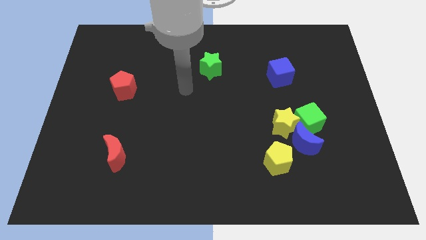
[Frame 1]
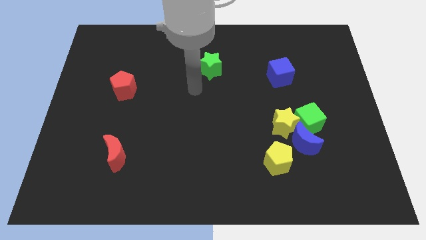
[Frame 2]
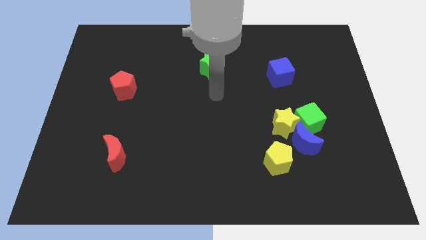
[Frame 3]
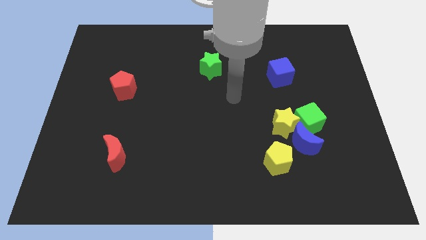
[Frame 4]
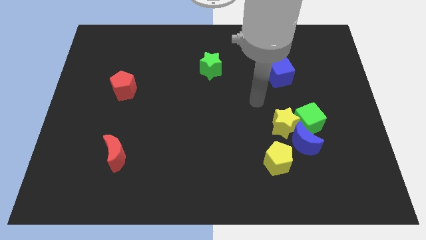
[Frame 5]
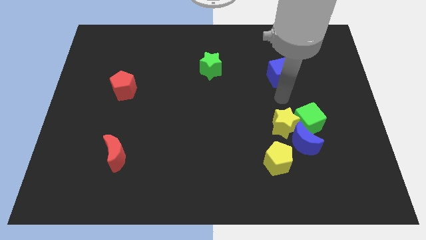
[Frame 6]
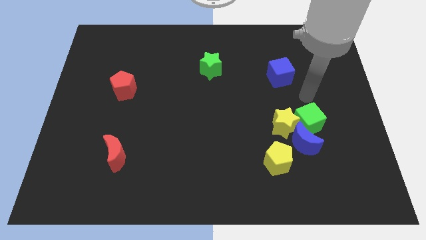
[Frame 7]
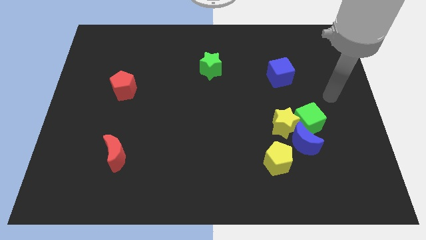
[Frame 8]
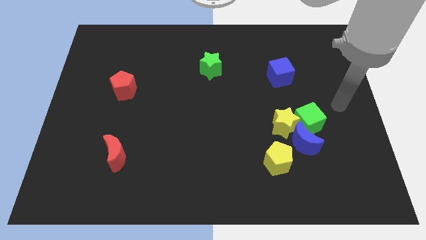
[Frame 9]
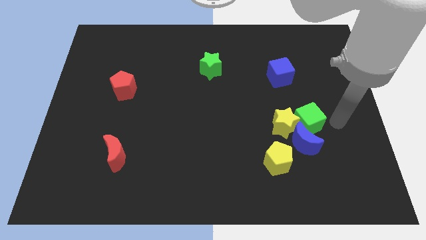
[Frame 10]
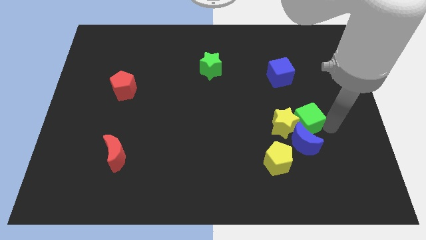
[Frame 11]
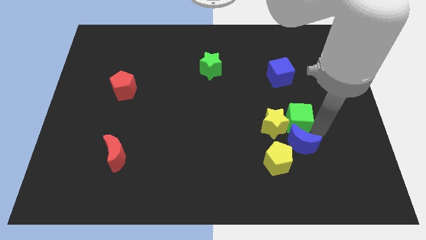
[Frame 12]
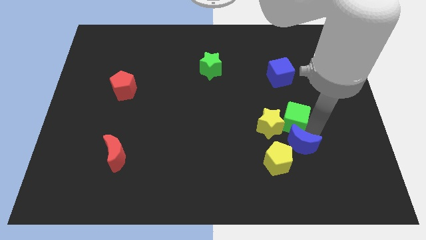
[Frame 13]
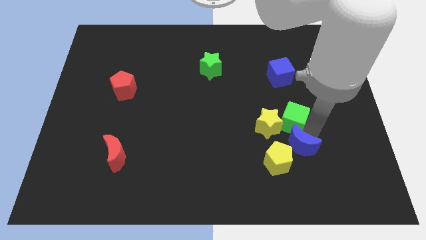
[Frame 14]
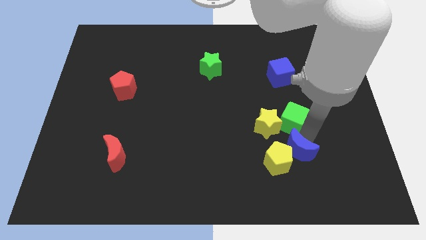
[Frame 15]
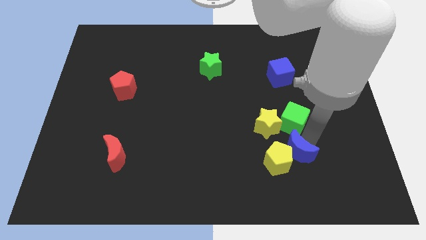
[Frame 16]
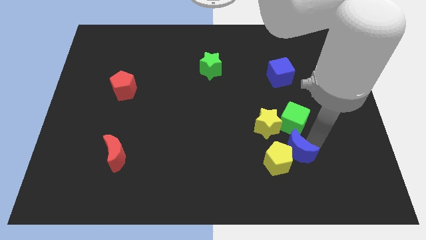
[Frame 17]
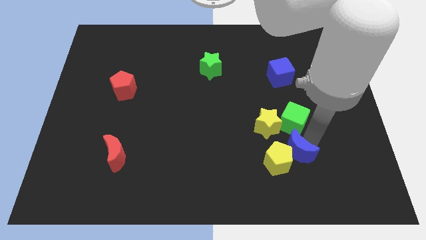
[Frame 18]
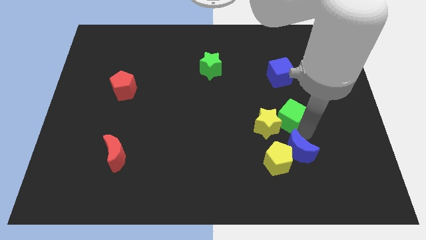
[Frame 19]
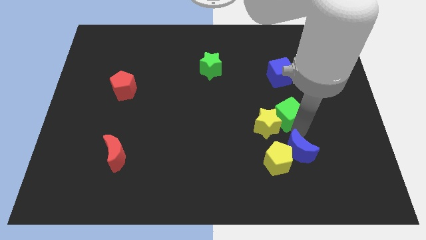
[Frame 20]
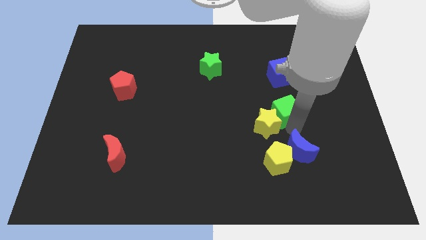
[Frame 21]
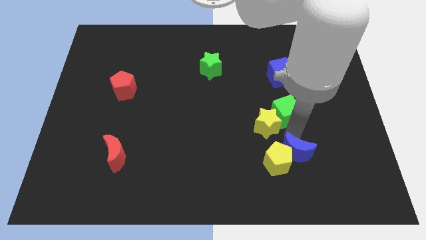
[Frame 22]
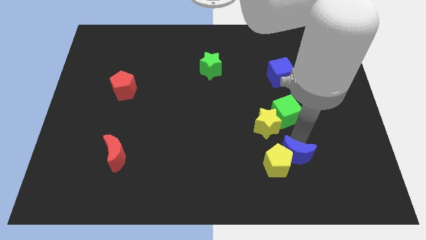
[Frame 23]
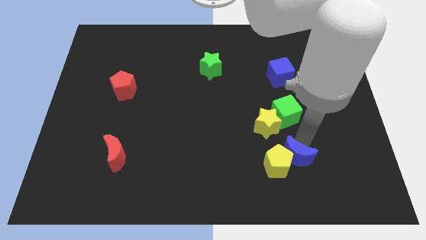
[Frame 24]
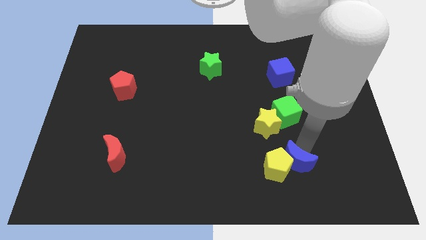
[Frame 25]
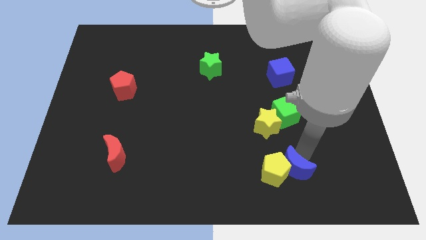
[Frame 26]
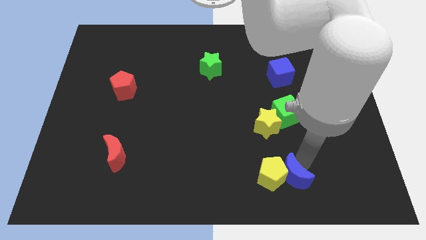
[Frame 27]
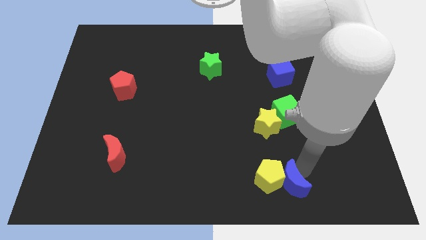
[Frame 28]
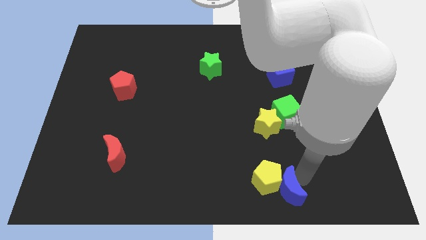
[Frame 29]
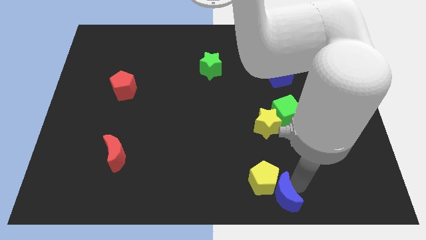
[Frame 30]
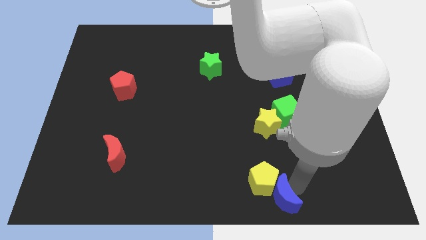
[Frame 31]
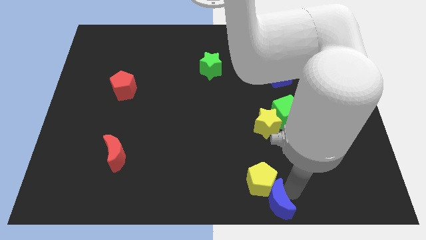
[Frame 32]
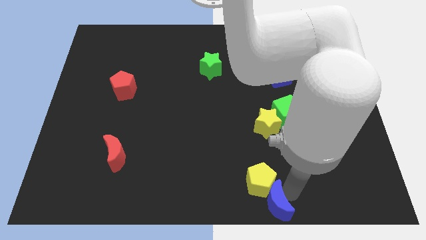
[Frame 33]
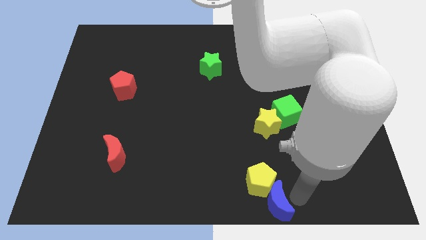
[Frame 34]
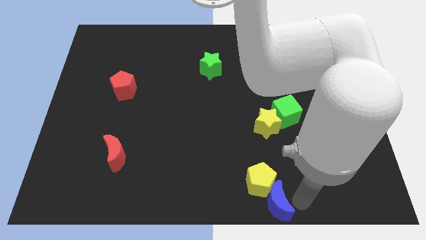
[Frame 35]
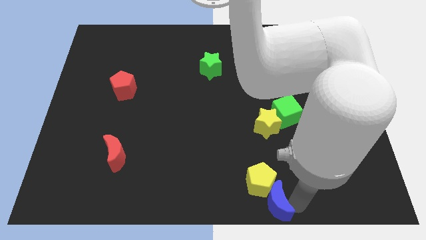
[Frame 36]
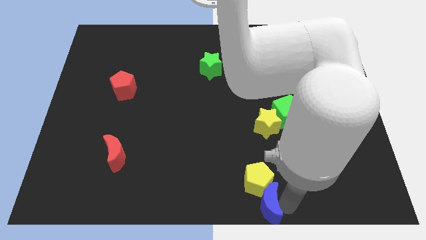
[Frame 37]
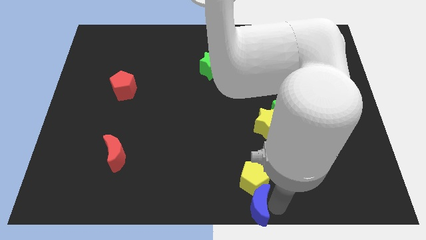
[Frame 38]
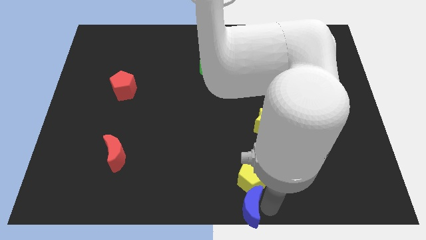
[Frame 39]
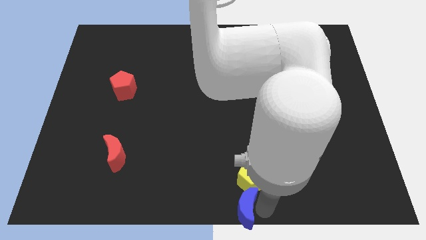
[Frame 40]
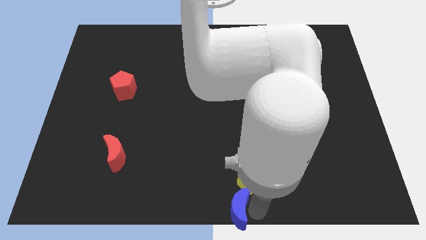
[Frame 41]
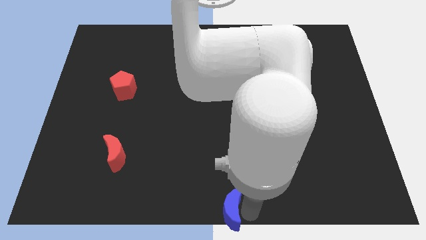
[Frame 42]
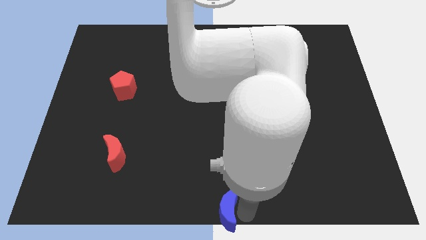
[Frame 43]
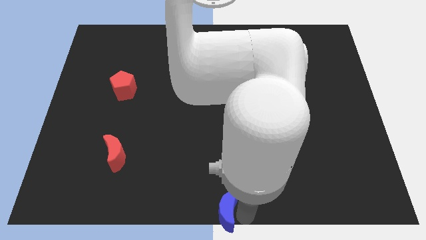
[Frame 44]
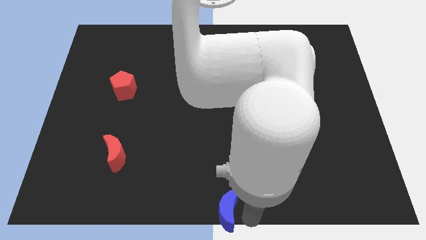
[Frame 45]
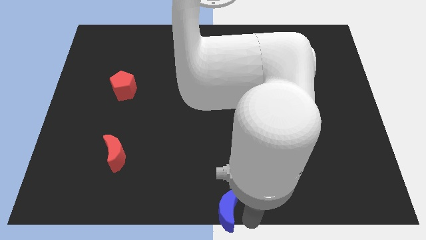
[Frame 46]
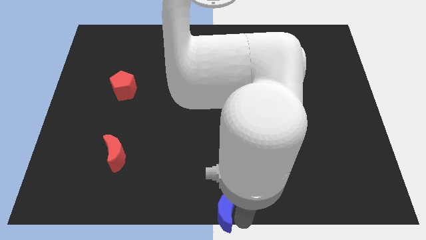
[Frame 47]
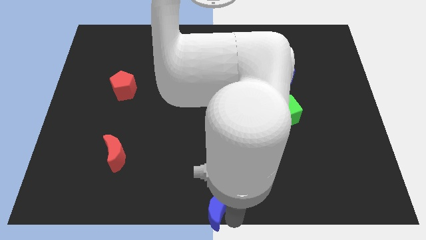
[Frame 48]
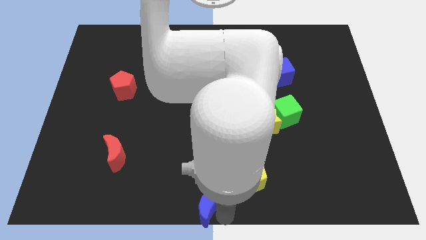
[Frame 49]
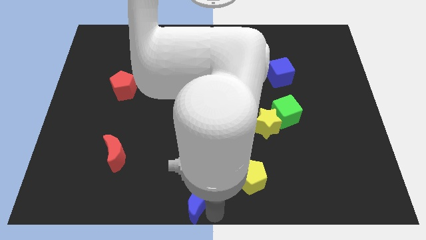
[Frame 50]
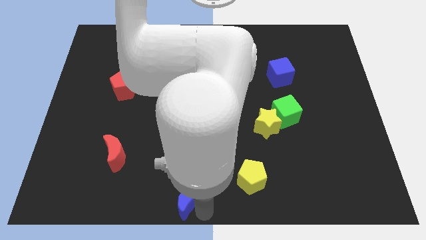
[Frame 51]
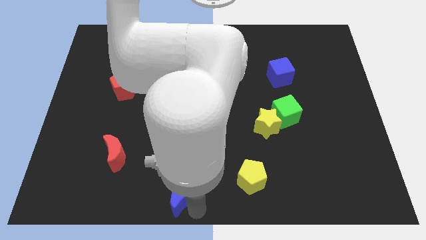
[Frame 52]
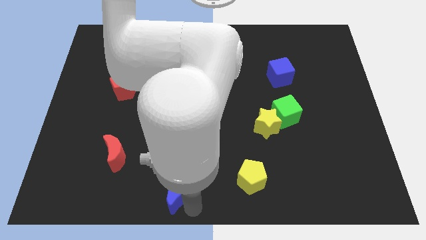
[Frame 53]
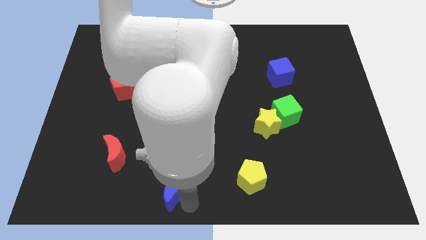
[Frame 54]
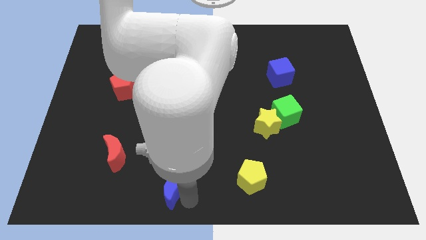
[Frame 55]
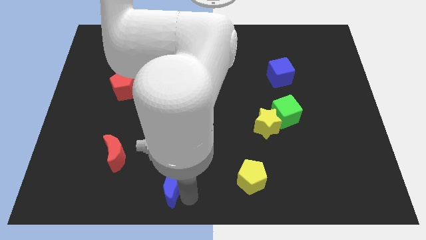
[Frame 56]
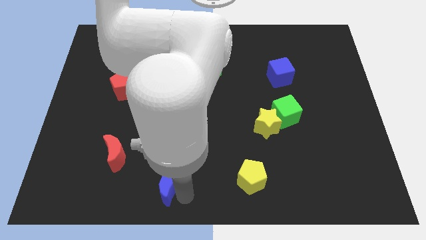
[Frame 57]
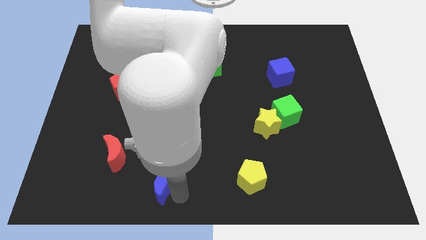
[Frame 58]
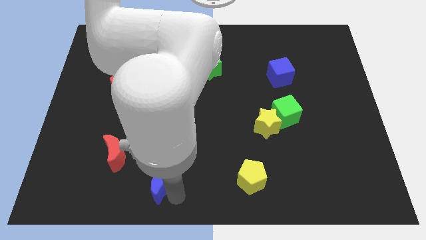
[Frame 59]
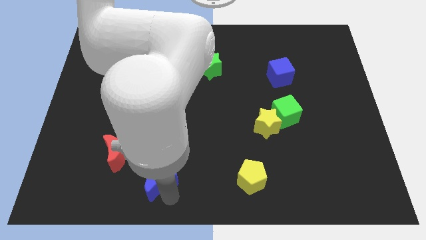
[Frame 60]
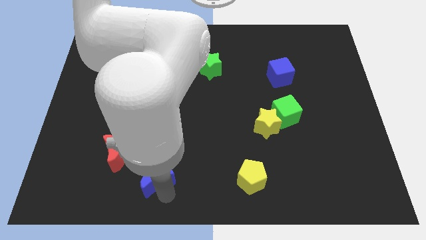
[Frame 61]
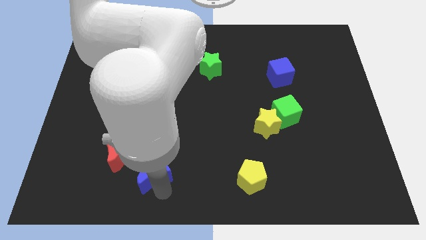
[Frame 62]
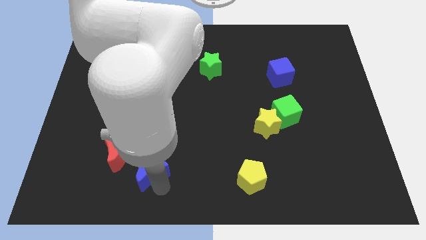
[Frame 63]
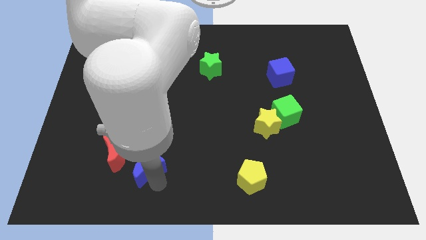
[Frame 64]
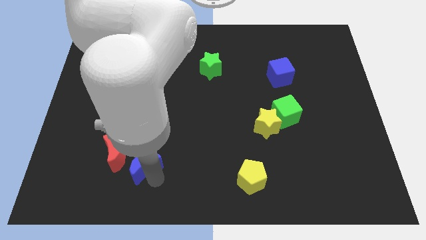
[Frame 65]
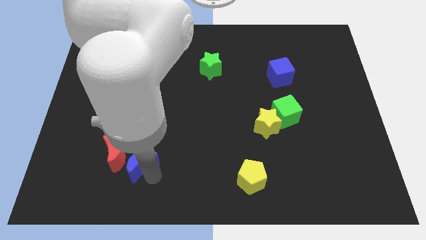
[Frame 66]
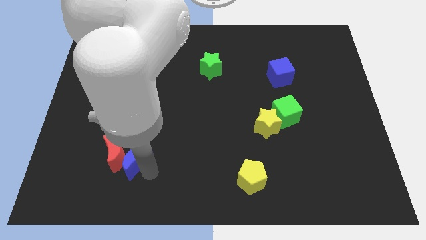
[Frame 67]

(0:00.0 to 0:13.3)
move the blue moon towards the red moon

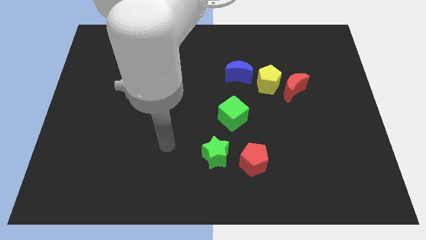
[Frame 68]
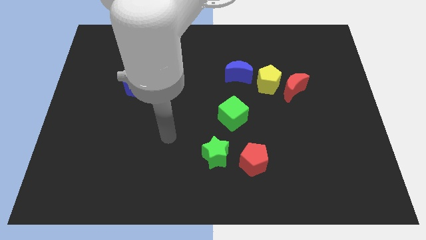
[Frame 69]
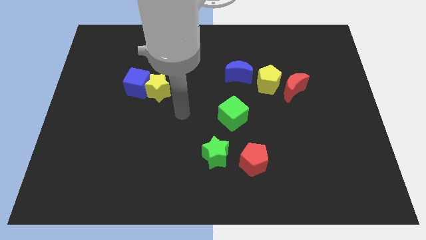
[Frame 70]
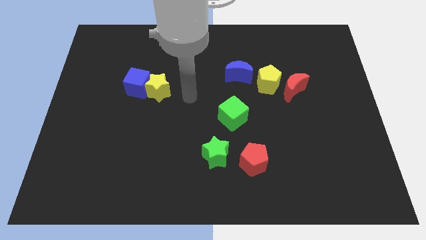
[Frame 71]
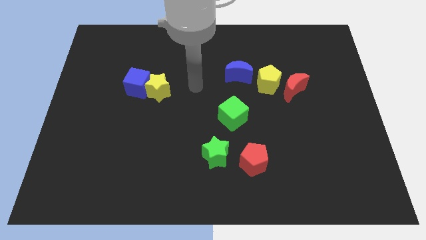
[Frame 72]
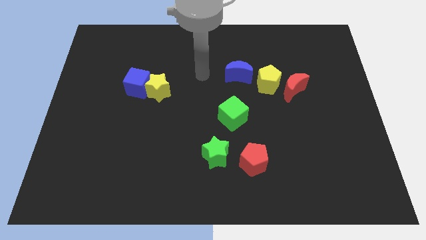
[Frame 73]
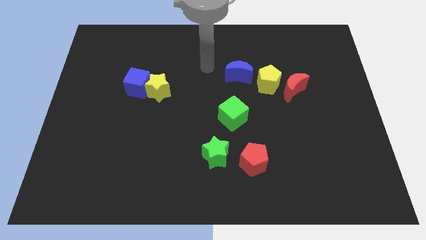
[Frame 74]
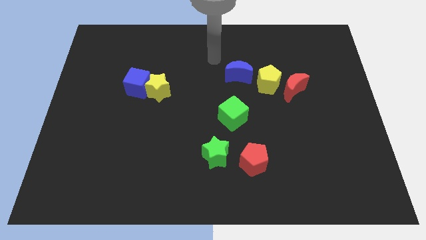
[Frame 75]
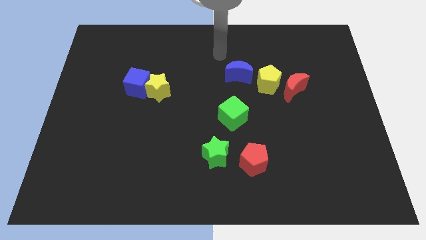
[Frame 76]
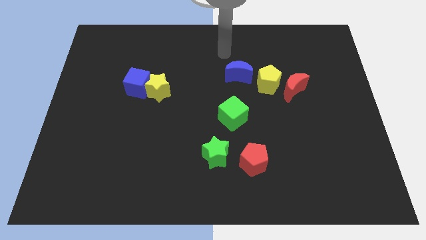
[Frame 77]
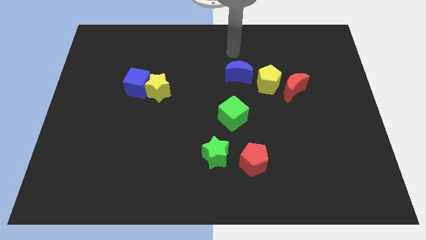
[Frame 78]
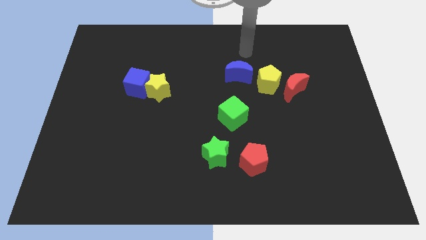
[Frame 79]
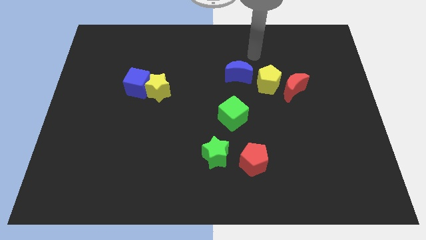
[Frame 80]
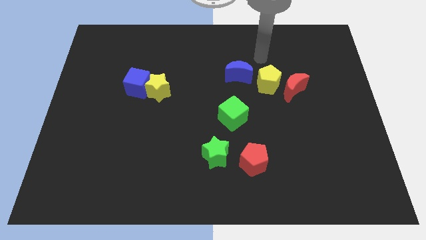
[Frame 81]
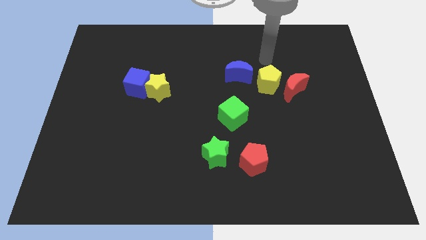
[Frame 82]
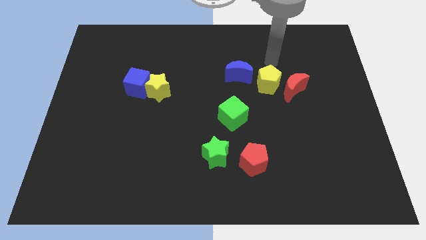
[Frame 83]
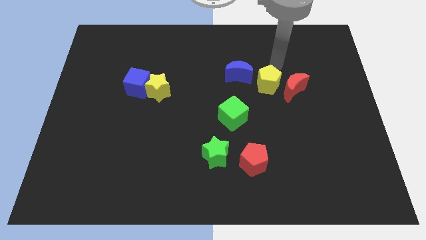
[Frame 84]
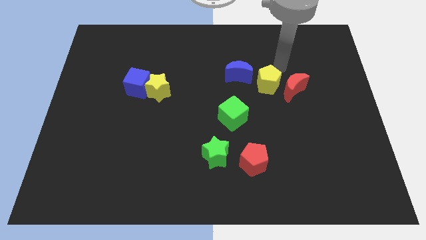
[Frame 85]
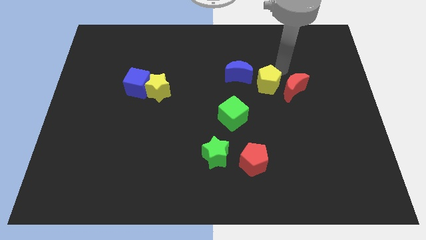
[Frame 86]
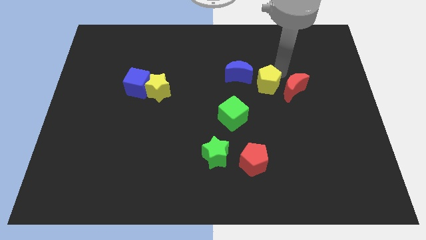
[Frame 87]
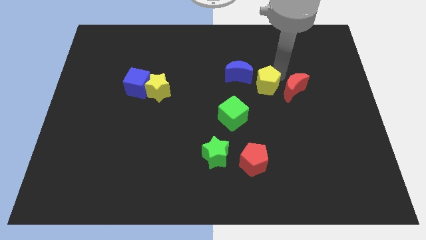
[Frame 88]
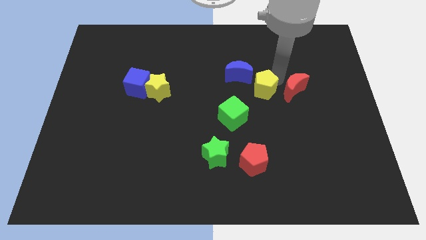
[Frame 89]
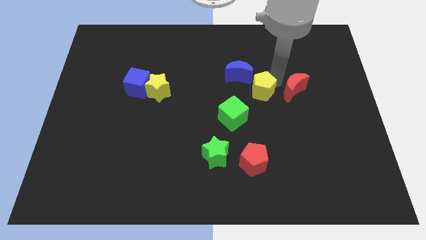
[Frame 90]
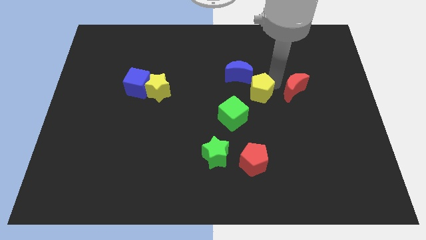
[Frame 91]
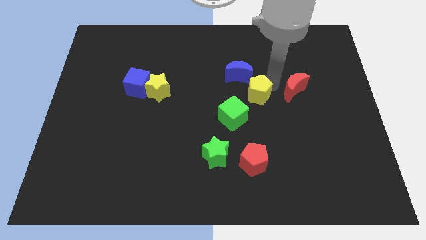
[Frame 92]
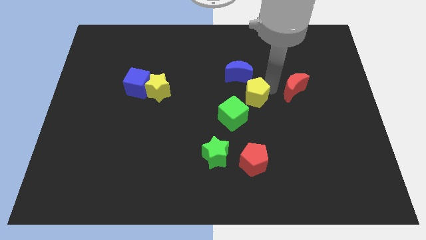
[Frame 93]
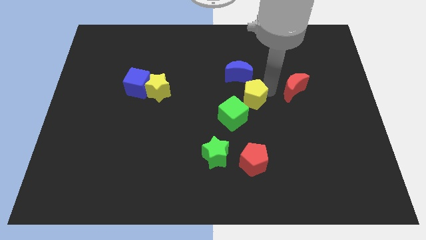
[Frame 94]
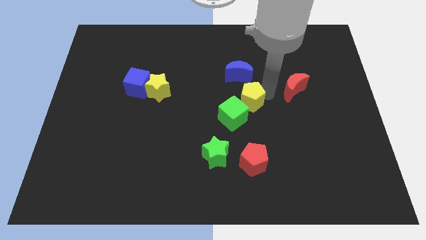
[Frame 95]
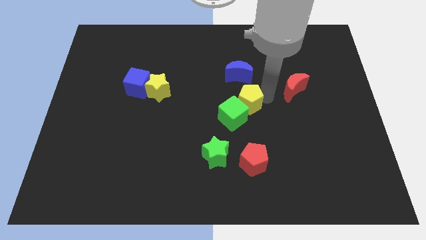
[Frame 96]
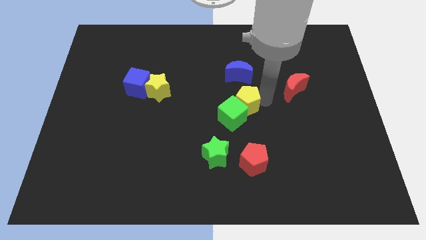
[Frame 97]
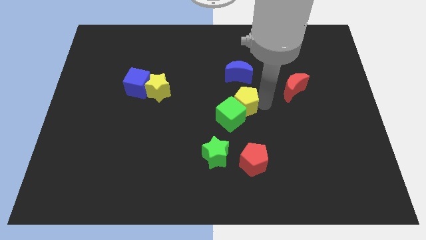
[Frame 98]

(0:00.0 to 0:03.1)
slide the yellow pentagon towards the green cube
